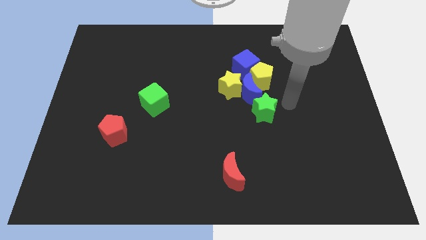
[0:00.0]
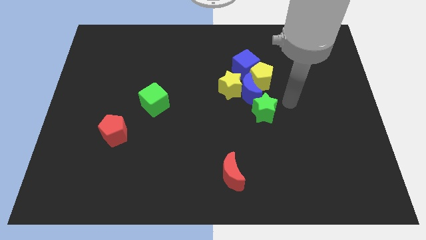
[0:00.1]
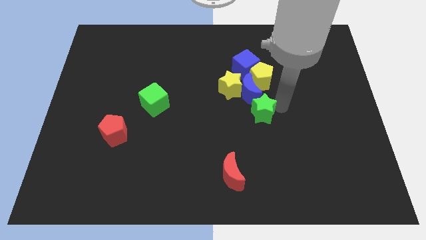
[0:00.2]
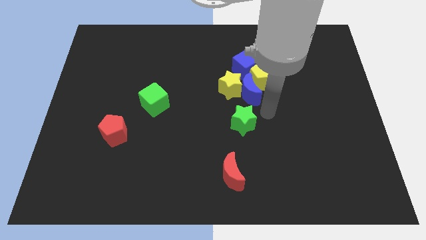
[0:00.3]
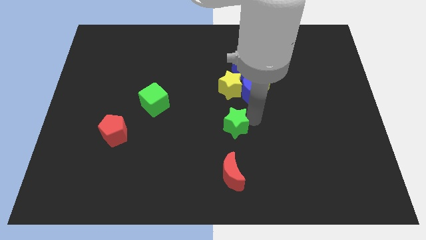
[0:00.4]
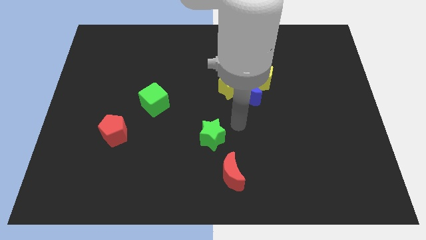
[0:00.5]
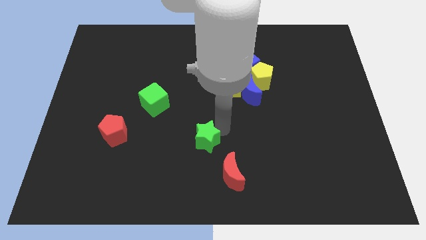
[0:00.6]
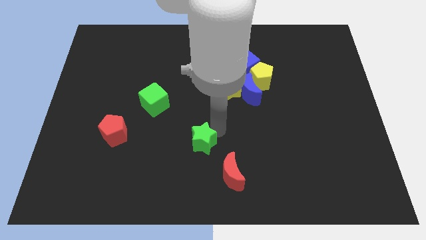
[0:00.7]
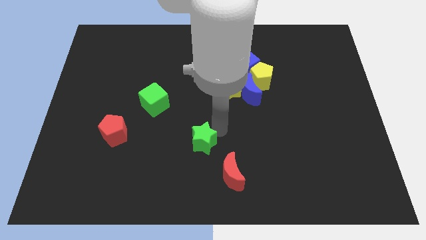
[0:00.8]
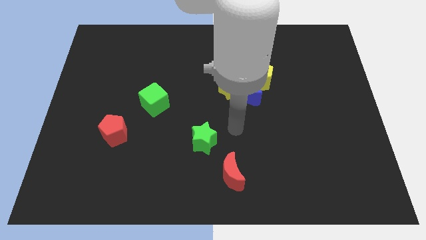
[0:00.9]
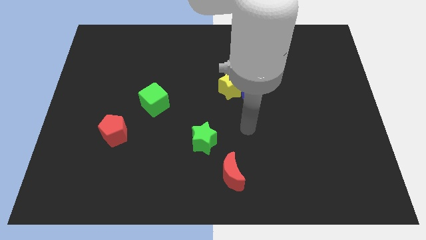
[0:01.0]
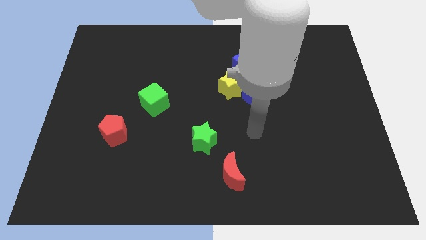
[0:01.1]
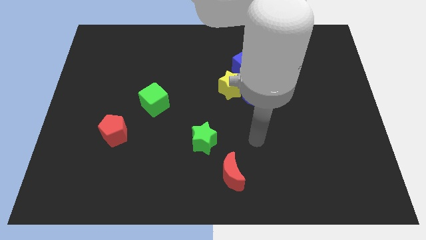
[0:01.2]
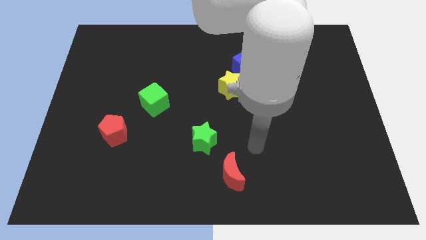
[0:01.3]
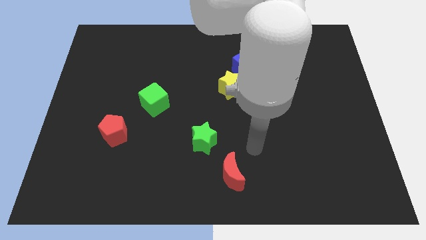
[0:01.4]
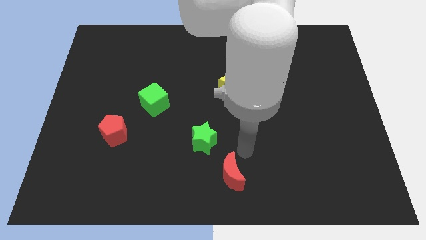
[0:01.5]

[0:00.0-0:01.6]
move the green star diagonally to the bottom right of the green cube

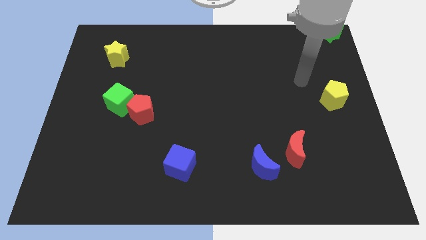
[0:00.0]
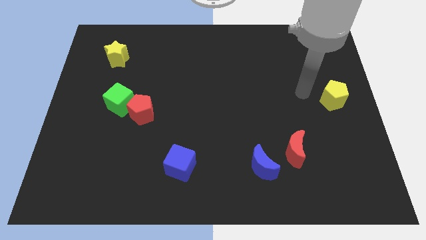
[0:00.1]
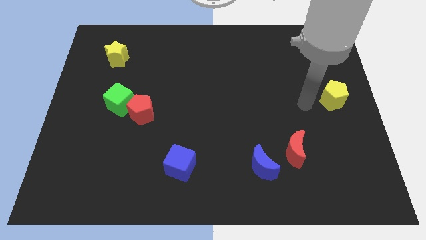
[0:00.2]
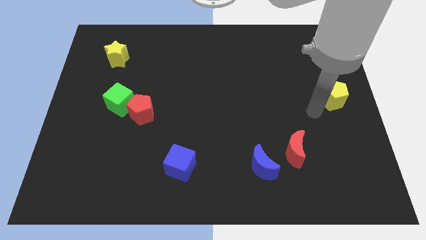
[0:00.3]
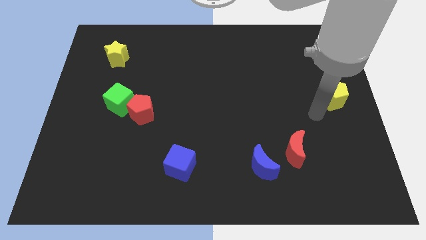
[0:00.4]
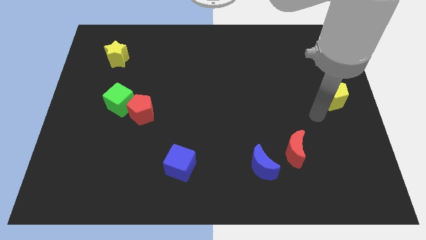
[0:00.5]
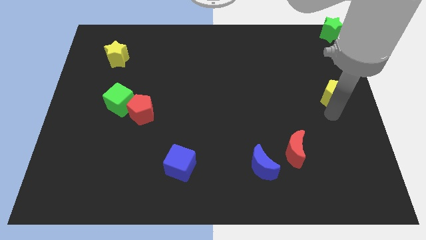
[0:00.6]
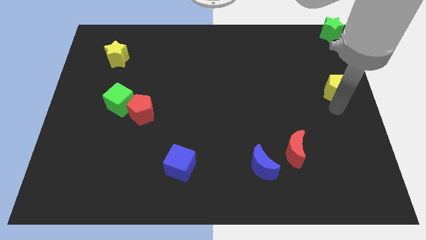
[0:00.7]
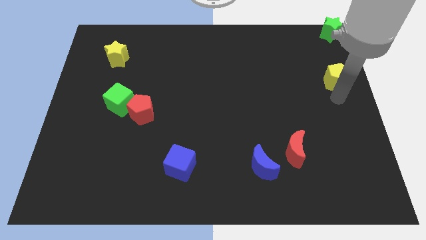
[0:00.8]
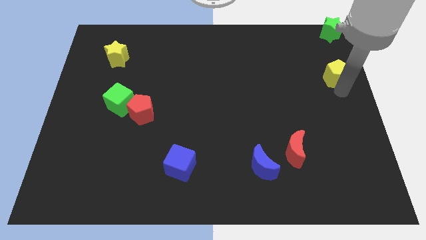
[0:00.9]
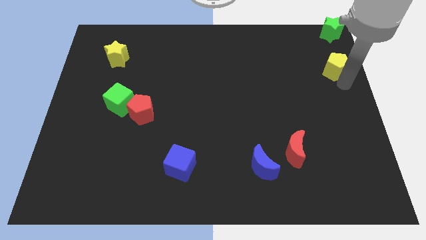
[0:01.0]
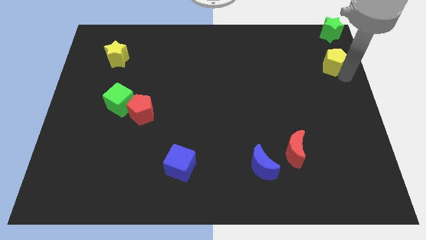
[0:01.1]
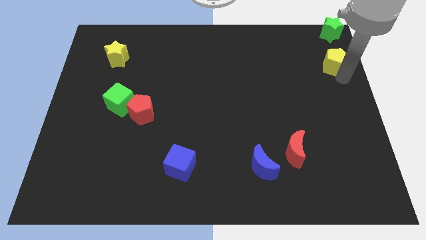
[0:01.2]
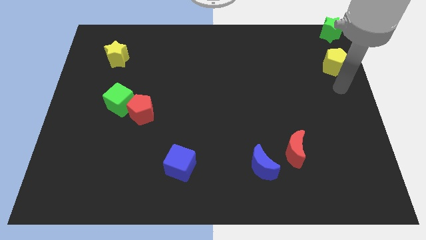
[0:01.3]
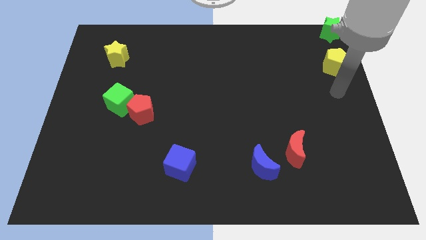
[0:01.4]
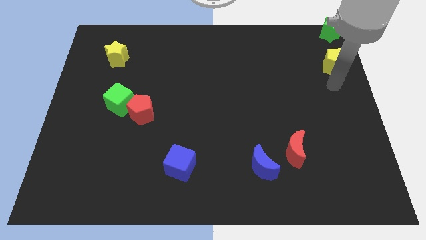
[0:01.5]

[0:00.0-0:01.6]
drag the yellow pentagon towards the green star

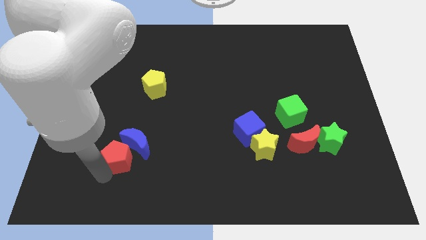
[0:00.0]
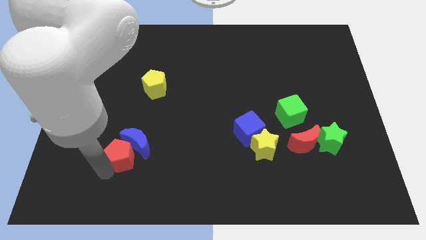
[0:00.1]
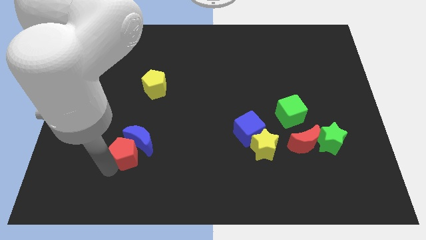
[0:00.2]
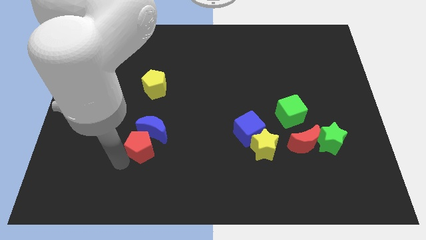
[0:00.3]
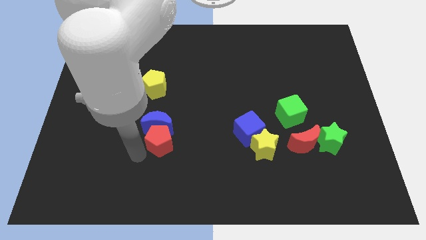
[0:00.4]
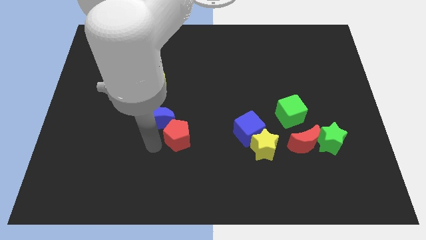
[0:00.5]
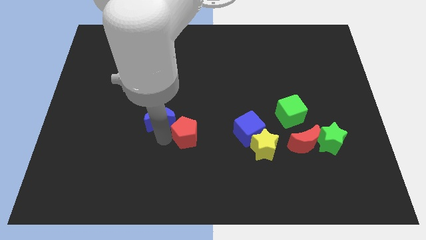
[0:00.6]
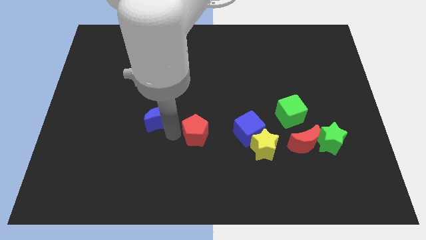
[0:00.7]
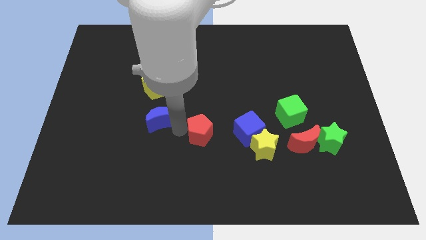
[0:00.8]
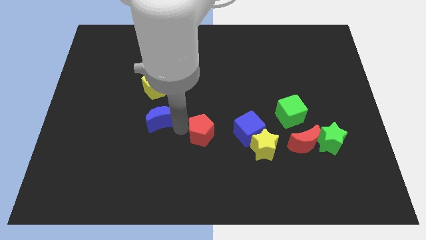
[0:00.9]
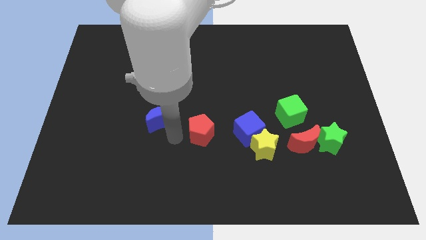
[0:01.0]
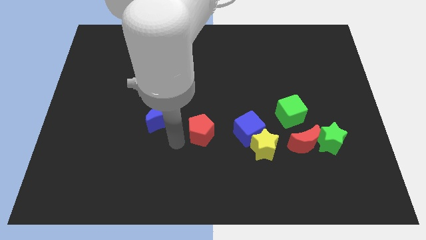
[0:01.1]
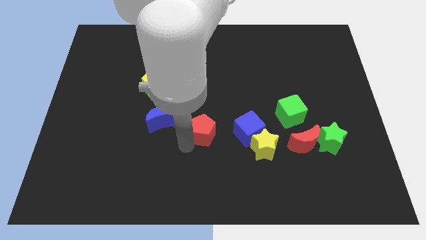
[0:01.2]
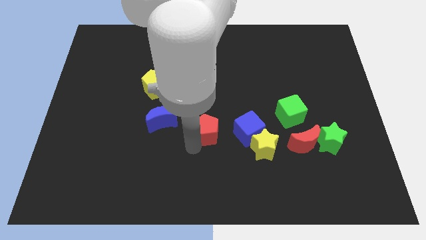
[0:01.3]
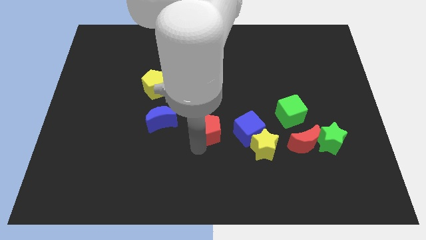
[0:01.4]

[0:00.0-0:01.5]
move the red pentagon in between the blue blocks

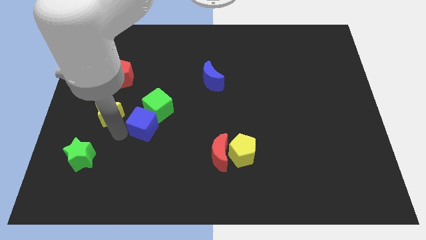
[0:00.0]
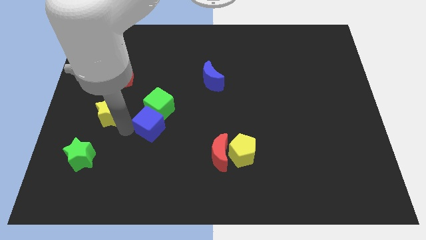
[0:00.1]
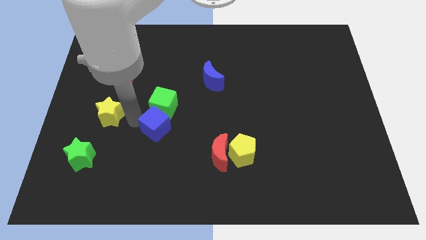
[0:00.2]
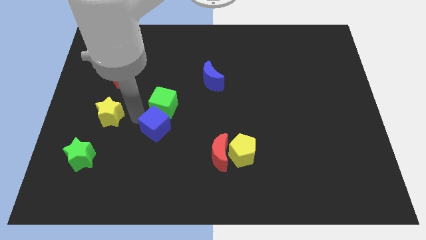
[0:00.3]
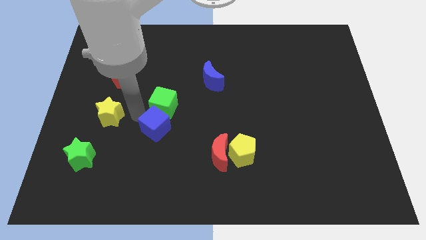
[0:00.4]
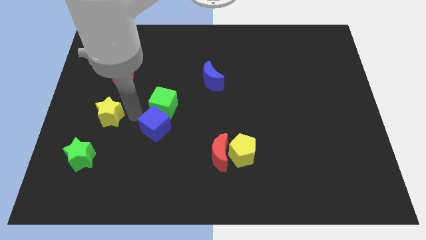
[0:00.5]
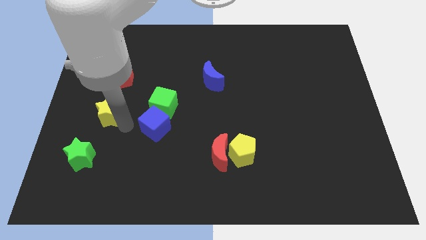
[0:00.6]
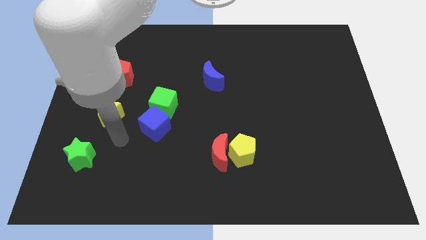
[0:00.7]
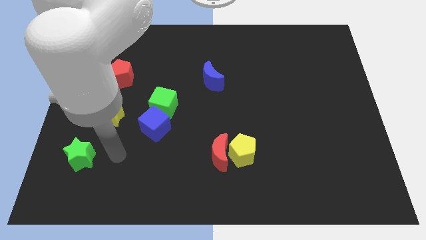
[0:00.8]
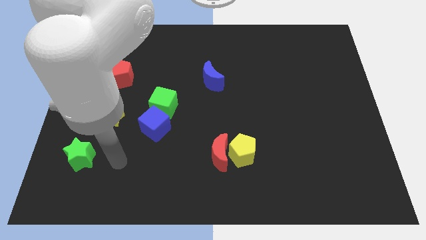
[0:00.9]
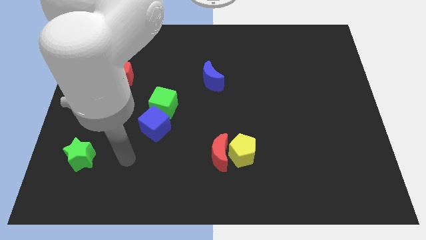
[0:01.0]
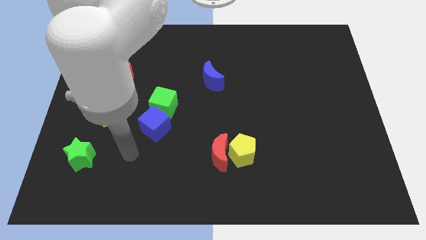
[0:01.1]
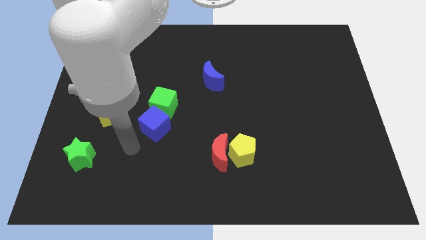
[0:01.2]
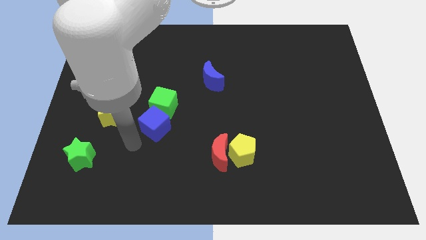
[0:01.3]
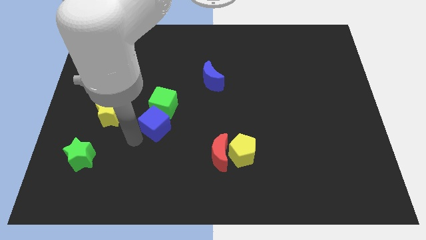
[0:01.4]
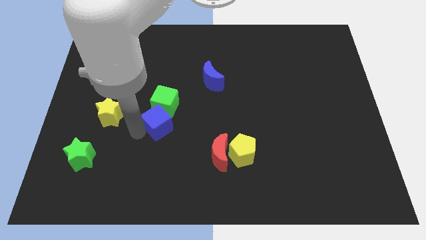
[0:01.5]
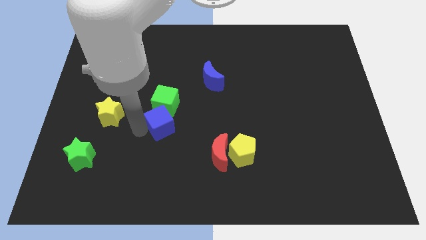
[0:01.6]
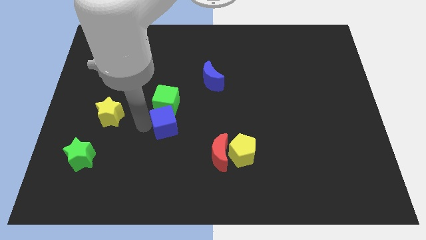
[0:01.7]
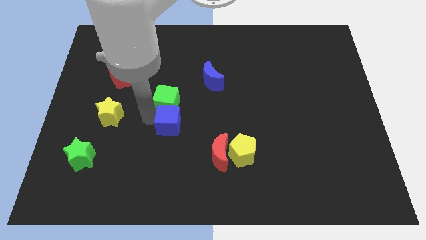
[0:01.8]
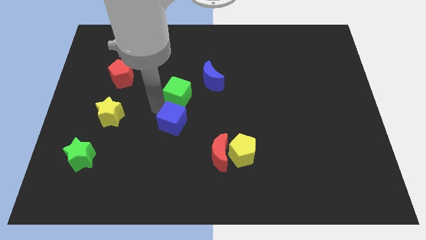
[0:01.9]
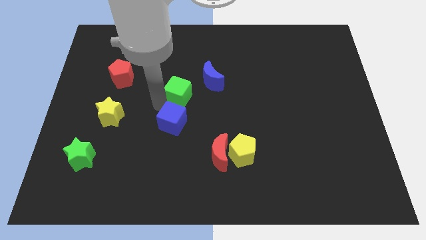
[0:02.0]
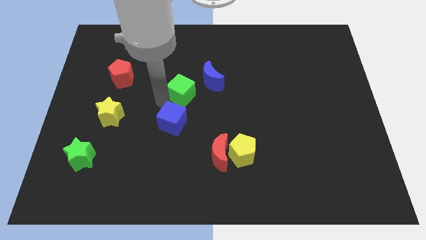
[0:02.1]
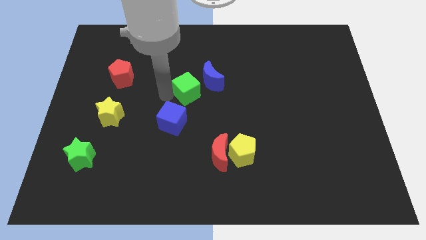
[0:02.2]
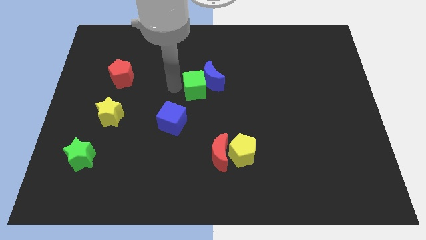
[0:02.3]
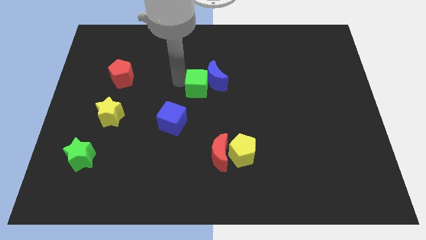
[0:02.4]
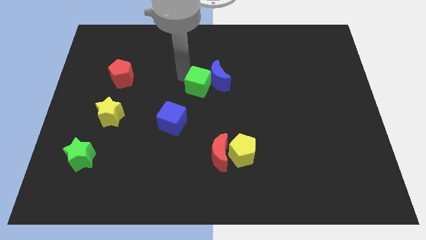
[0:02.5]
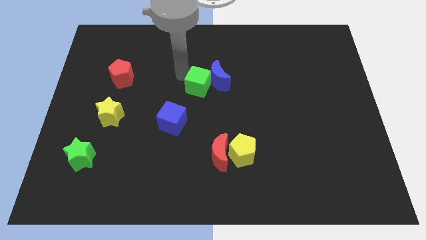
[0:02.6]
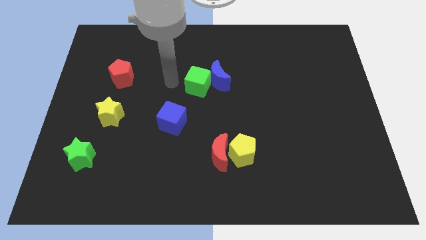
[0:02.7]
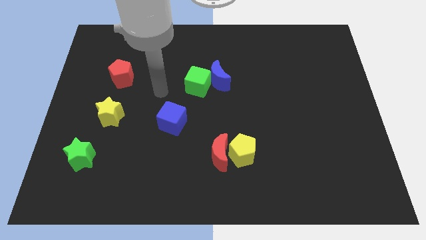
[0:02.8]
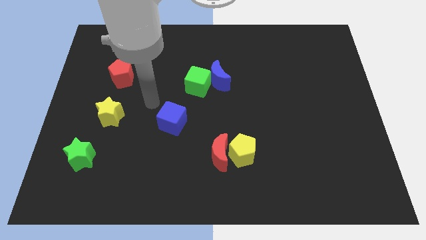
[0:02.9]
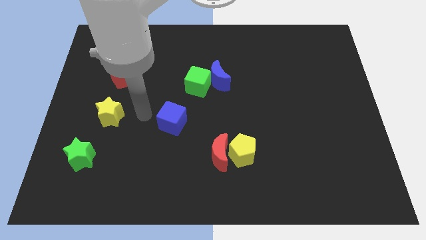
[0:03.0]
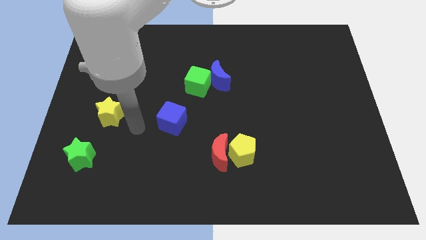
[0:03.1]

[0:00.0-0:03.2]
separate green cube from the blue cube

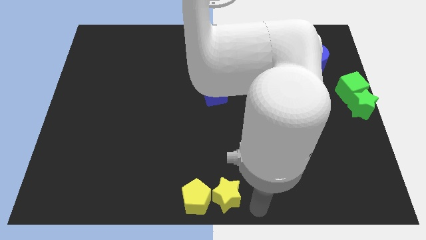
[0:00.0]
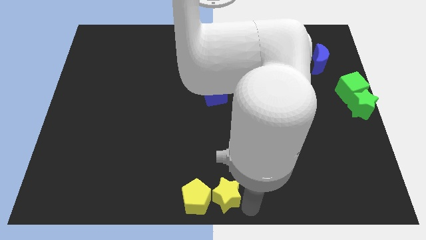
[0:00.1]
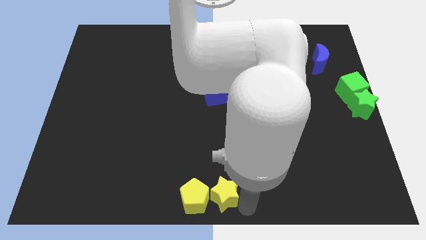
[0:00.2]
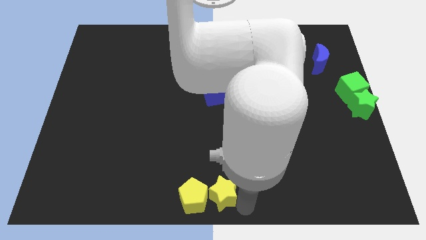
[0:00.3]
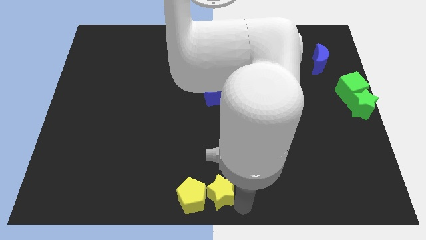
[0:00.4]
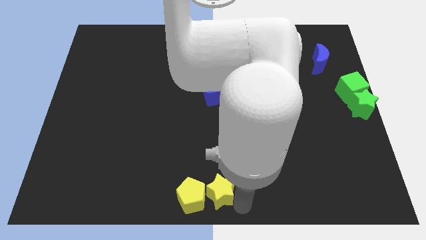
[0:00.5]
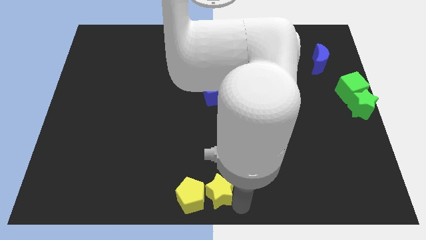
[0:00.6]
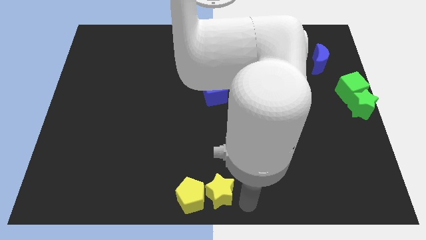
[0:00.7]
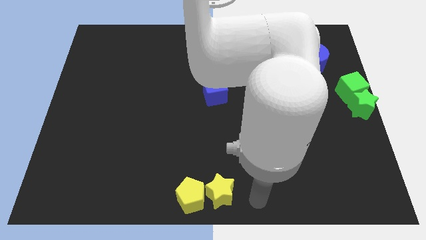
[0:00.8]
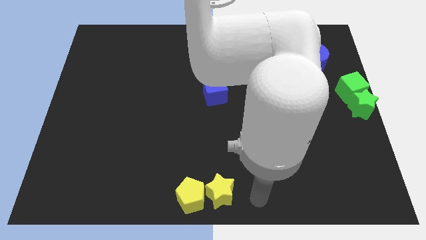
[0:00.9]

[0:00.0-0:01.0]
move your arm away form yellow star
